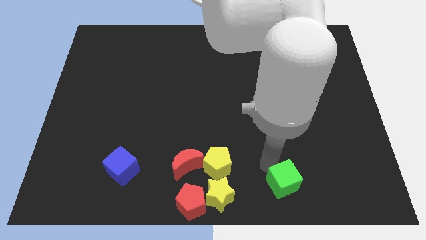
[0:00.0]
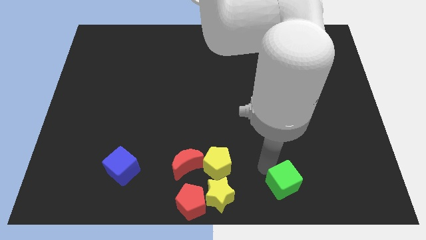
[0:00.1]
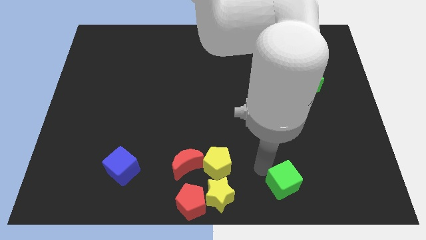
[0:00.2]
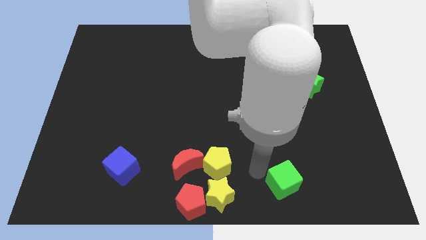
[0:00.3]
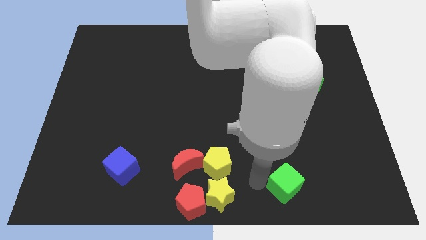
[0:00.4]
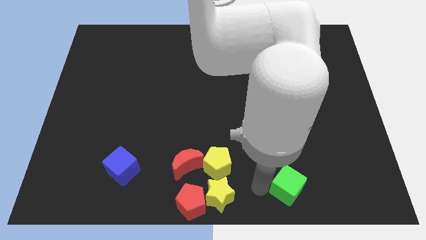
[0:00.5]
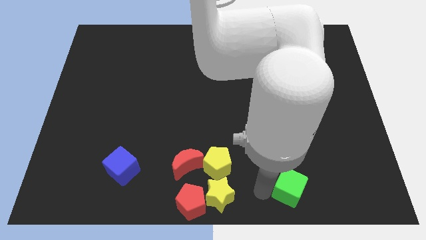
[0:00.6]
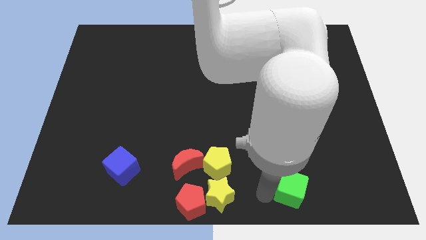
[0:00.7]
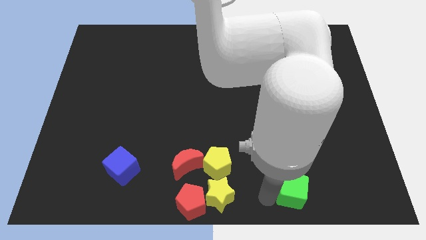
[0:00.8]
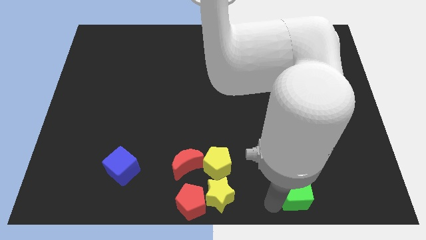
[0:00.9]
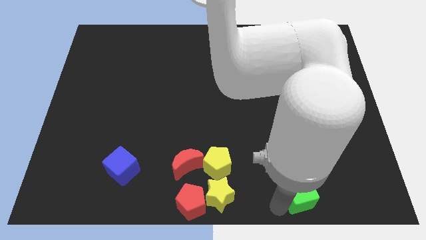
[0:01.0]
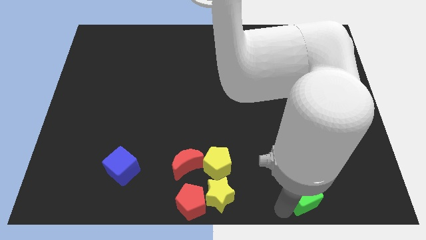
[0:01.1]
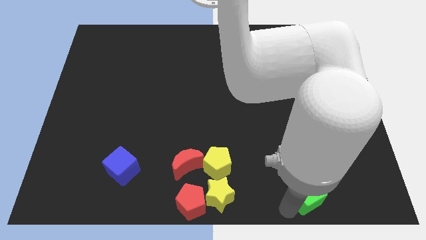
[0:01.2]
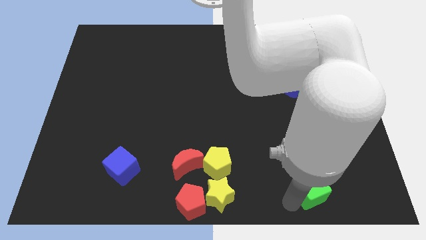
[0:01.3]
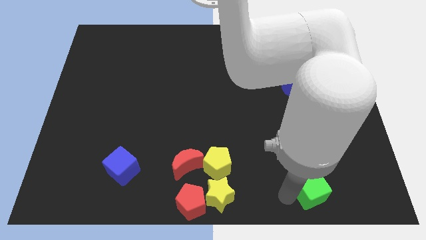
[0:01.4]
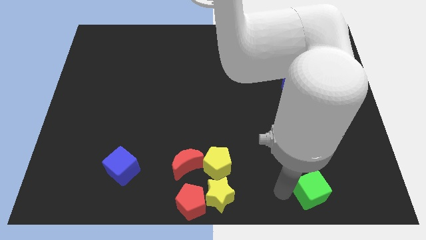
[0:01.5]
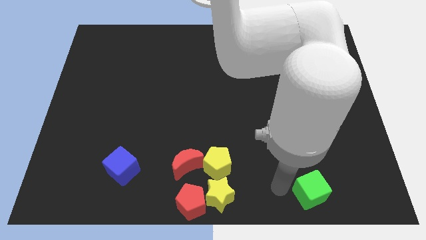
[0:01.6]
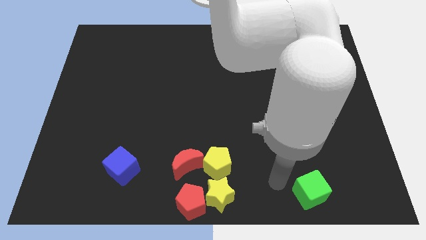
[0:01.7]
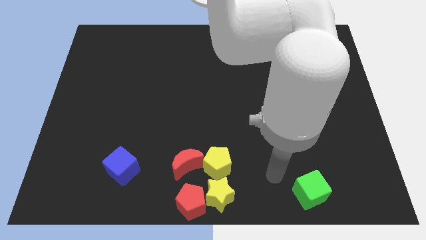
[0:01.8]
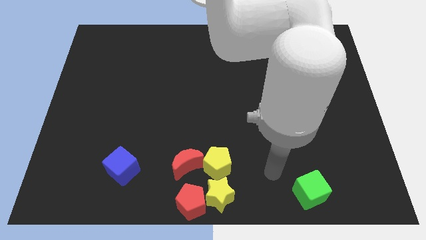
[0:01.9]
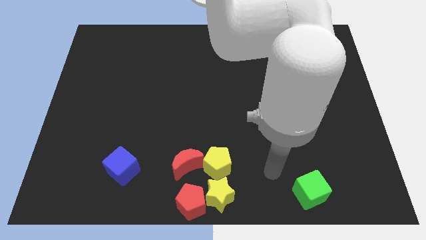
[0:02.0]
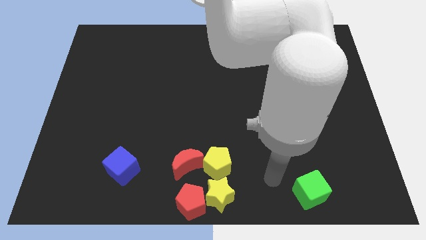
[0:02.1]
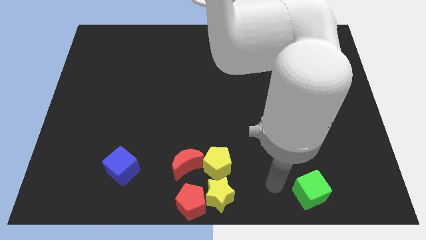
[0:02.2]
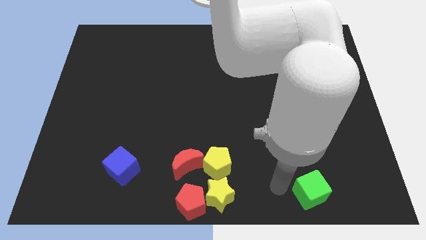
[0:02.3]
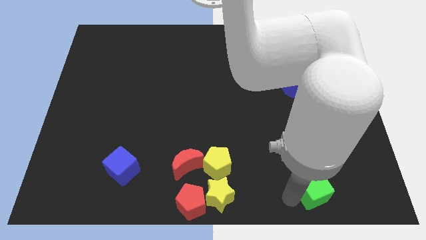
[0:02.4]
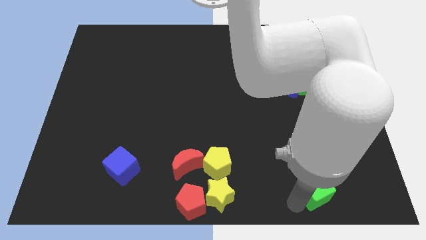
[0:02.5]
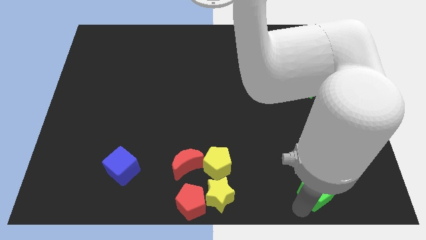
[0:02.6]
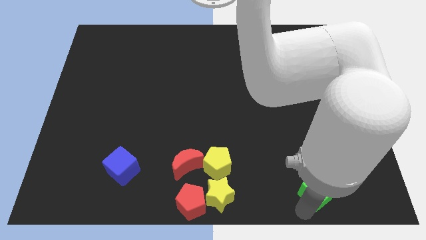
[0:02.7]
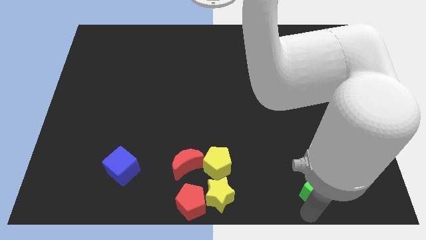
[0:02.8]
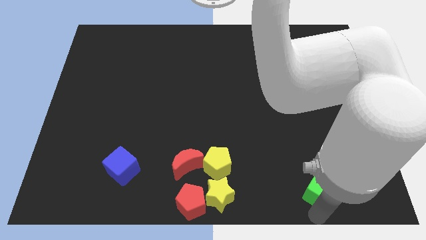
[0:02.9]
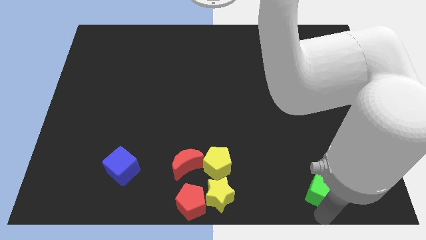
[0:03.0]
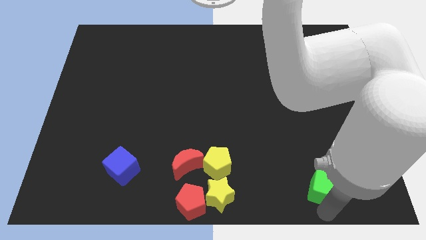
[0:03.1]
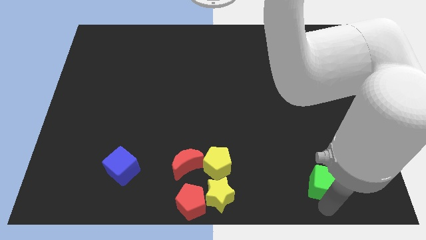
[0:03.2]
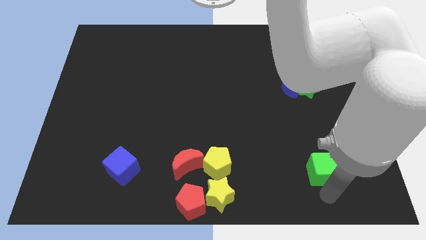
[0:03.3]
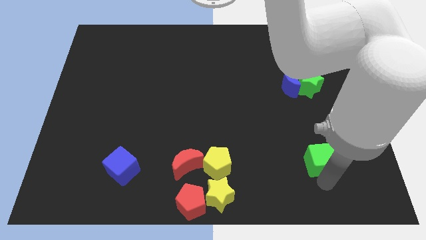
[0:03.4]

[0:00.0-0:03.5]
place green cube to the right of yellow pentagon

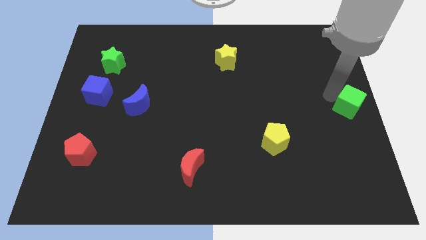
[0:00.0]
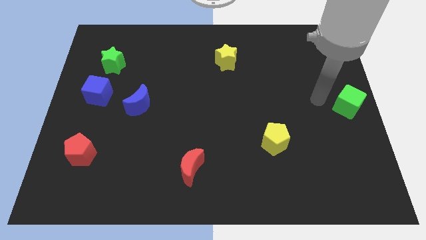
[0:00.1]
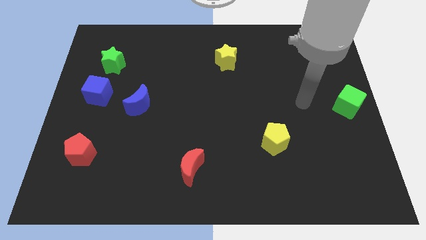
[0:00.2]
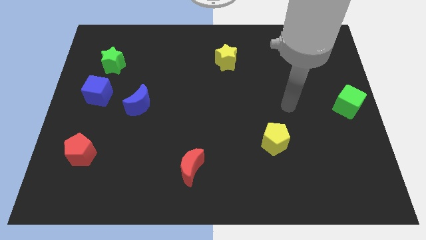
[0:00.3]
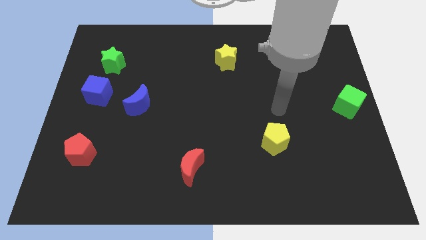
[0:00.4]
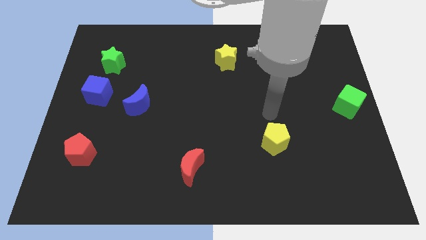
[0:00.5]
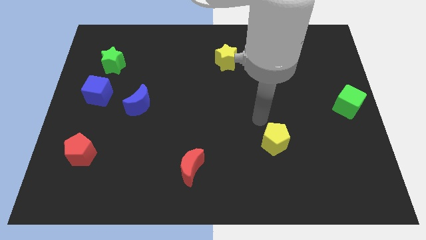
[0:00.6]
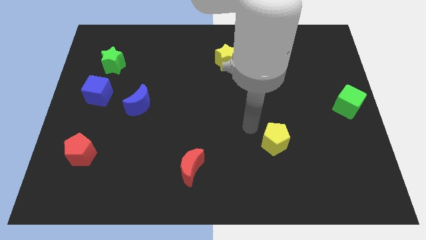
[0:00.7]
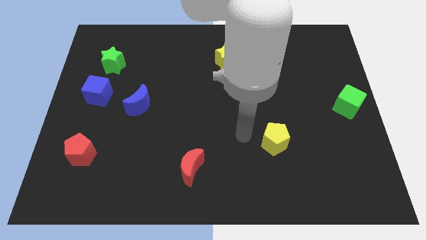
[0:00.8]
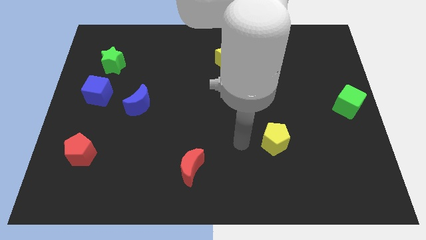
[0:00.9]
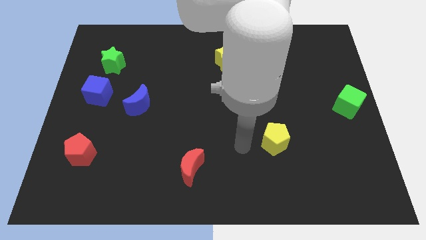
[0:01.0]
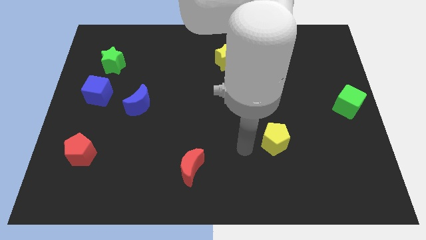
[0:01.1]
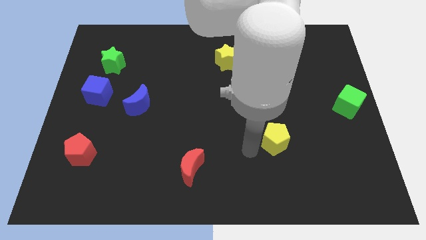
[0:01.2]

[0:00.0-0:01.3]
move your arm left to the yellow pentagon

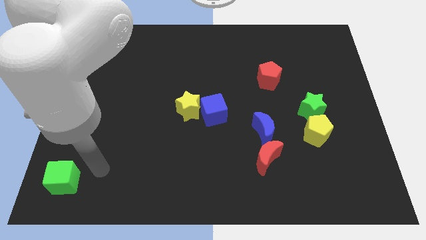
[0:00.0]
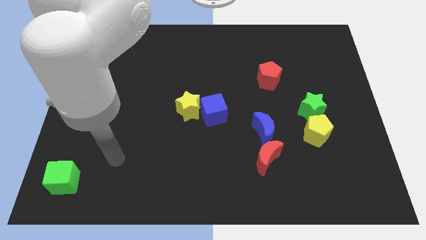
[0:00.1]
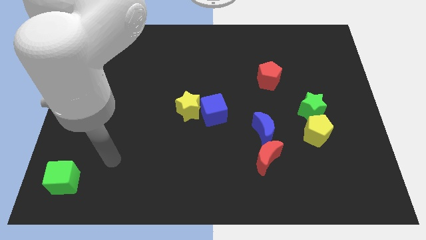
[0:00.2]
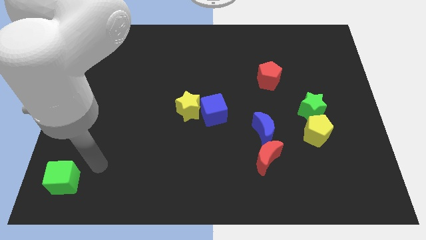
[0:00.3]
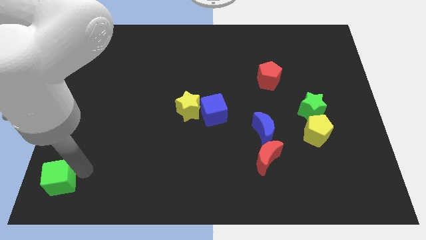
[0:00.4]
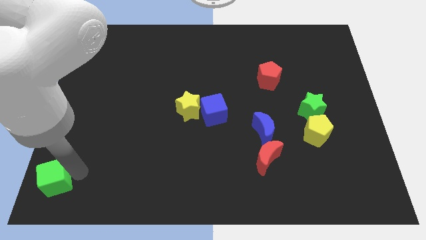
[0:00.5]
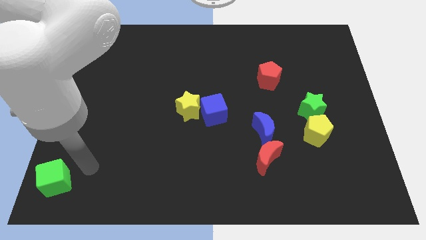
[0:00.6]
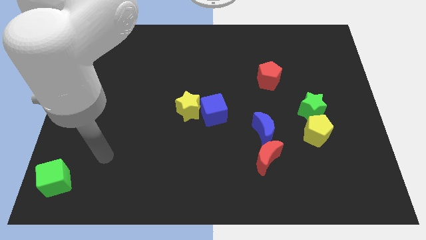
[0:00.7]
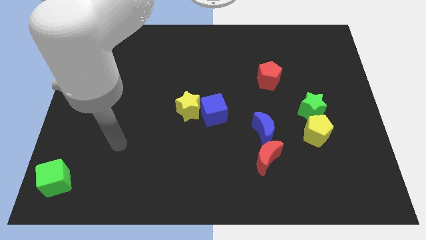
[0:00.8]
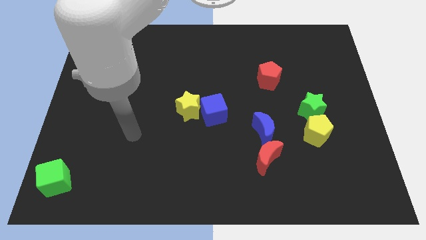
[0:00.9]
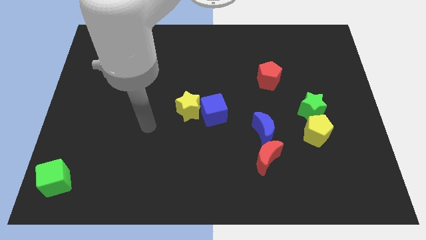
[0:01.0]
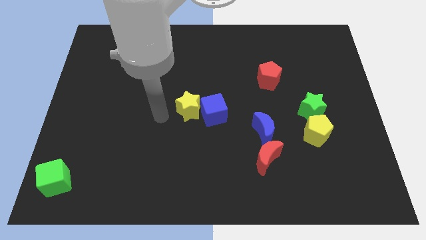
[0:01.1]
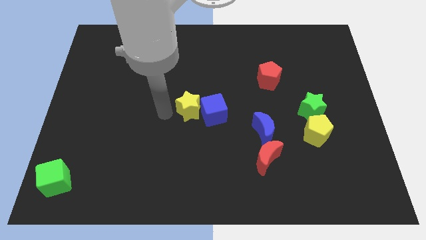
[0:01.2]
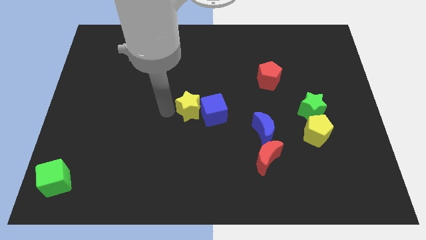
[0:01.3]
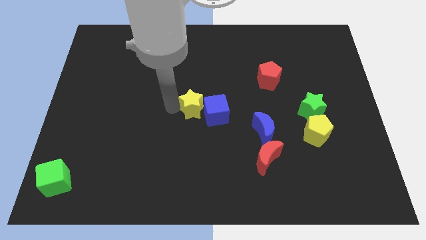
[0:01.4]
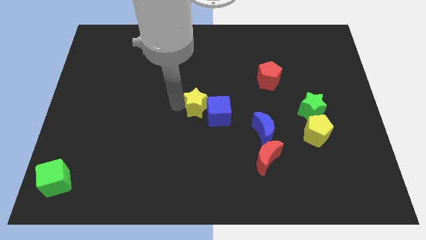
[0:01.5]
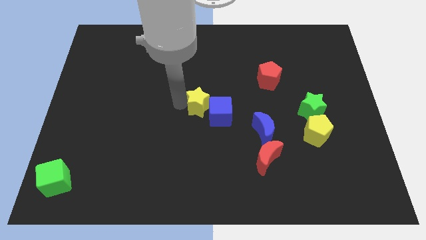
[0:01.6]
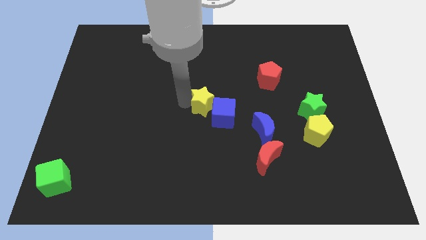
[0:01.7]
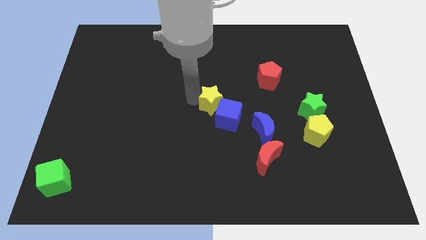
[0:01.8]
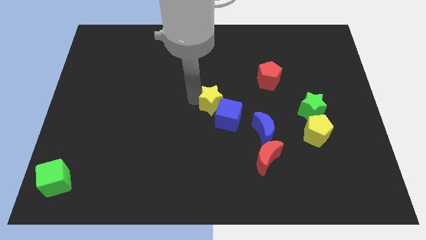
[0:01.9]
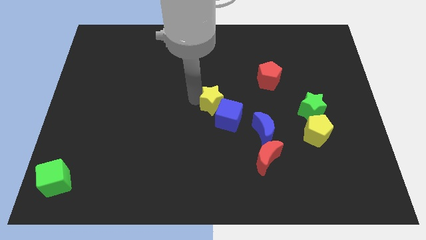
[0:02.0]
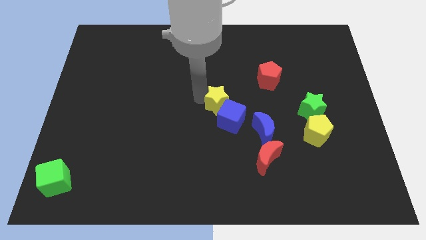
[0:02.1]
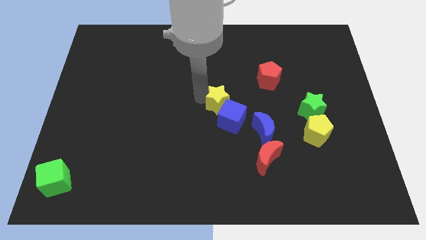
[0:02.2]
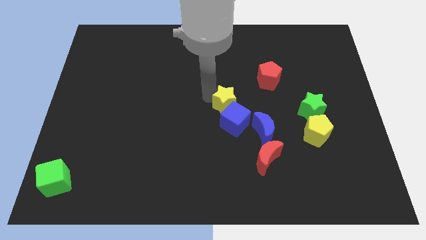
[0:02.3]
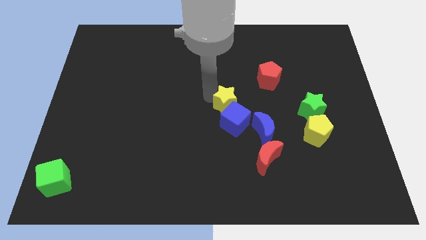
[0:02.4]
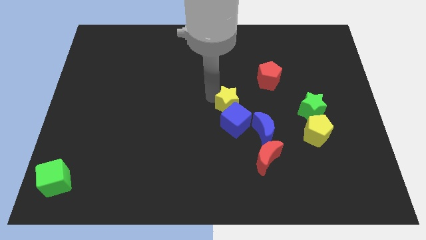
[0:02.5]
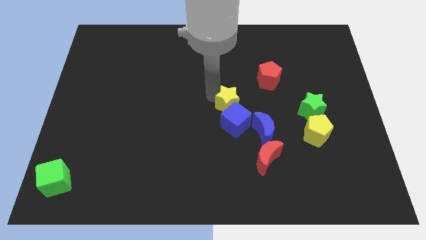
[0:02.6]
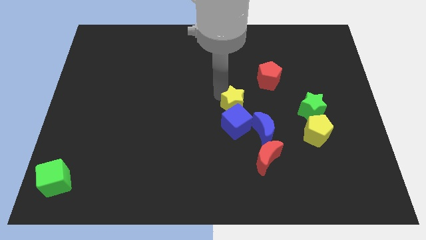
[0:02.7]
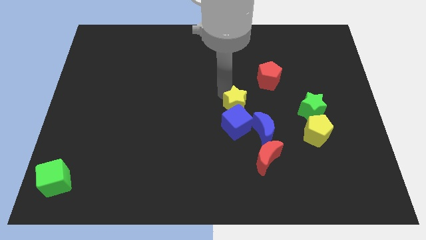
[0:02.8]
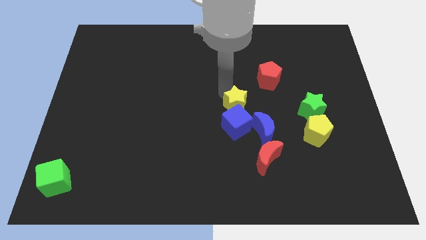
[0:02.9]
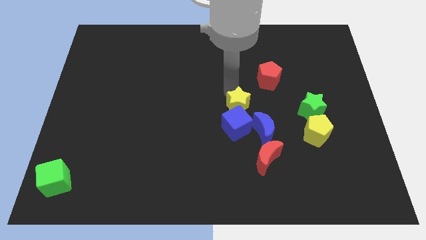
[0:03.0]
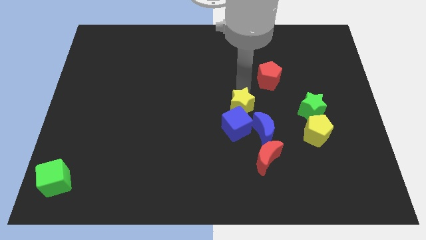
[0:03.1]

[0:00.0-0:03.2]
place the yellow star above the blue cube

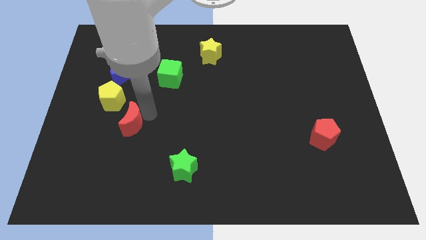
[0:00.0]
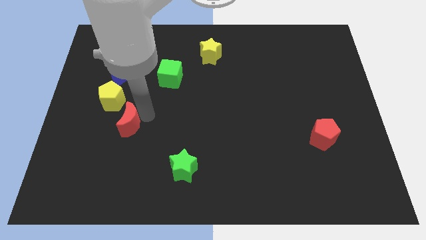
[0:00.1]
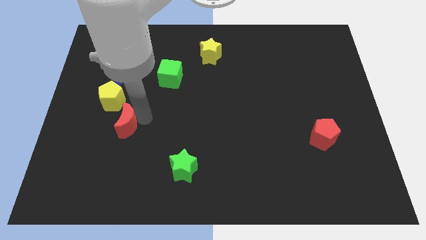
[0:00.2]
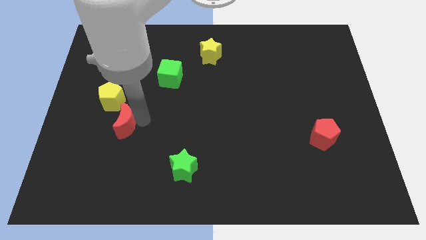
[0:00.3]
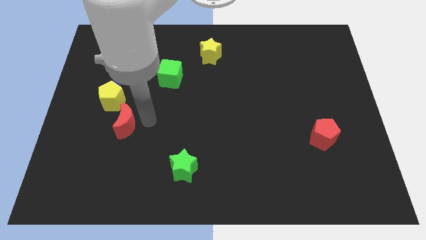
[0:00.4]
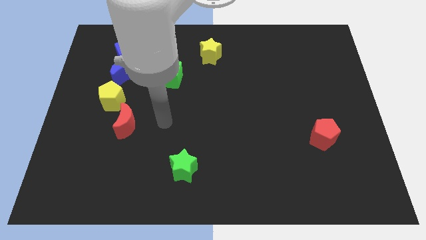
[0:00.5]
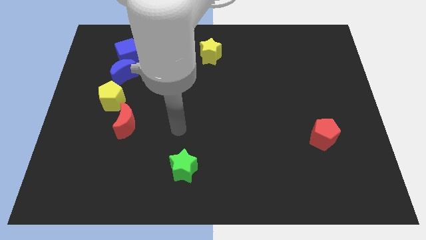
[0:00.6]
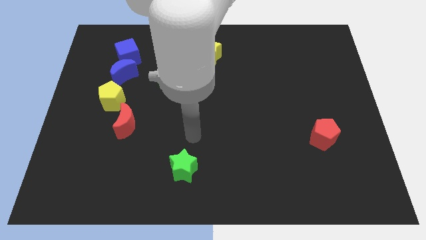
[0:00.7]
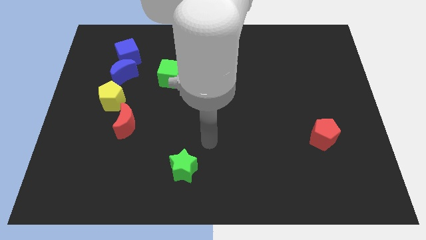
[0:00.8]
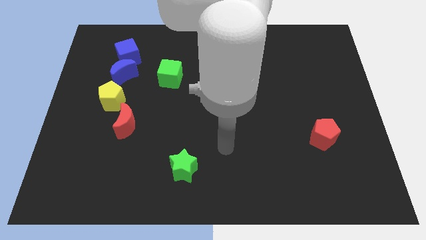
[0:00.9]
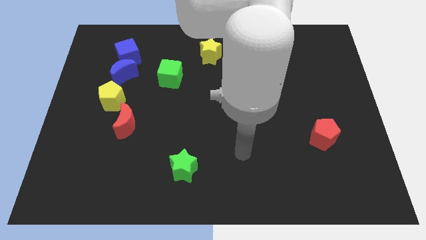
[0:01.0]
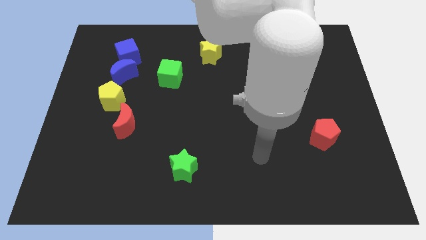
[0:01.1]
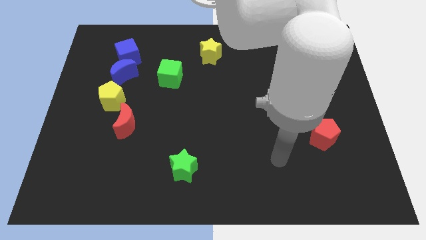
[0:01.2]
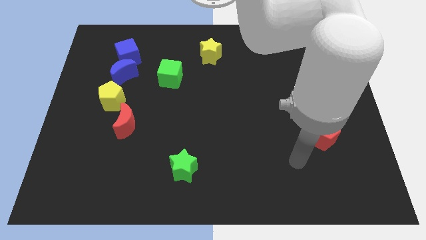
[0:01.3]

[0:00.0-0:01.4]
move the red crescent to the bottom right side of the yellow pentagon
